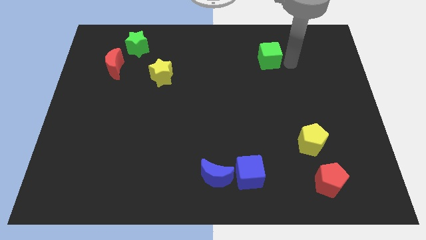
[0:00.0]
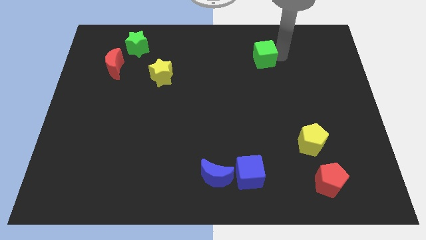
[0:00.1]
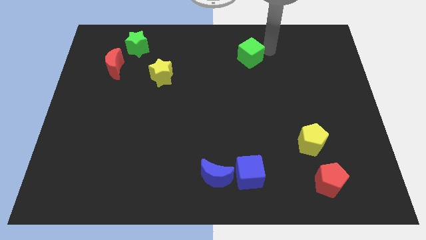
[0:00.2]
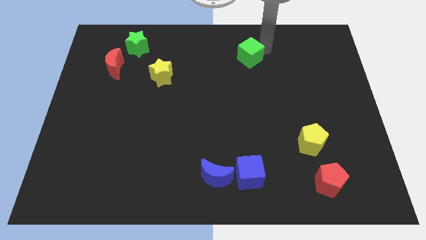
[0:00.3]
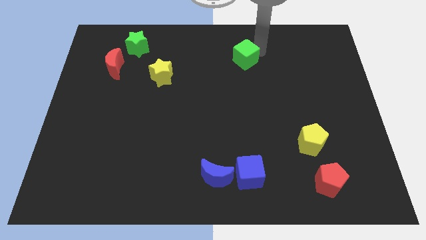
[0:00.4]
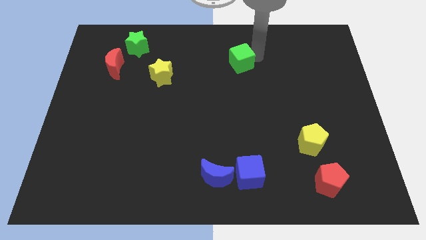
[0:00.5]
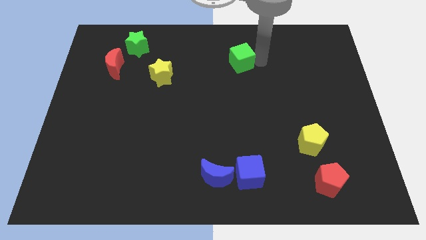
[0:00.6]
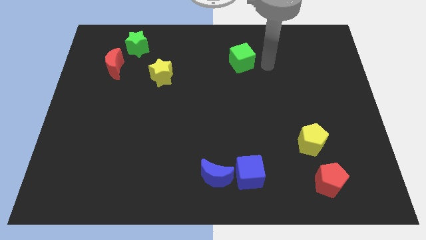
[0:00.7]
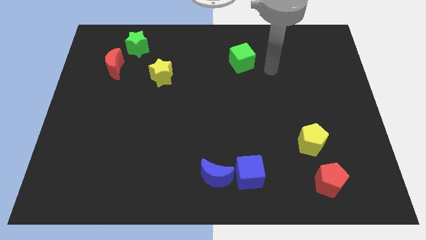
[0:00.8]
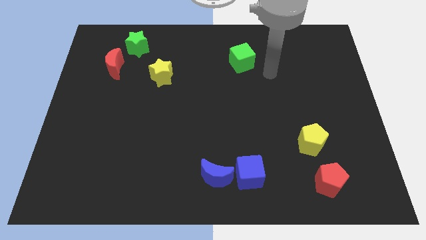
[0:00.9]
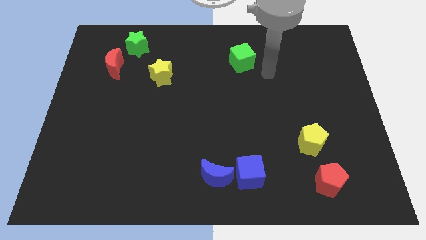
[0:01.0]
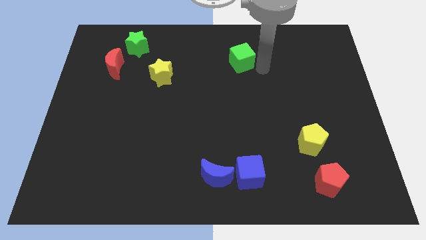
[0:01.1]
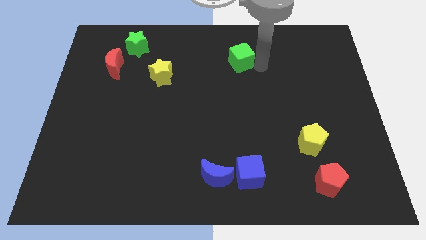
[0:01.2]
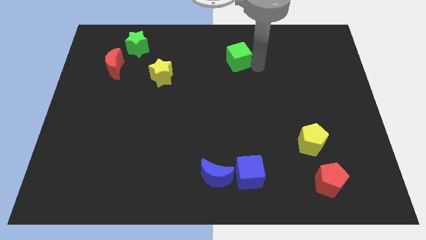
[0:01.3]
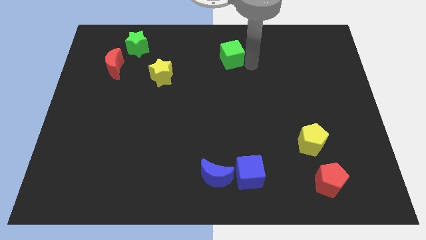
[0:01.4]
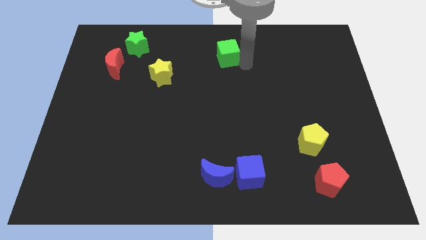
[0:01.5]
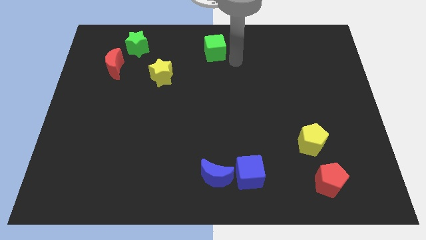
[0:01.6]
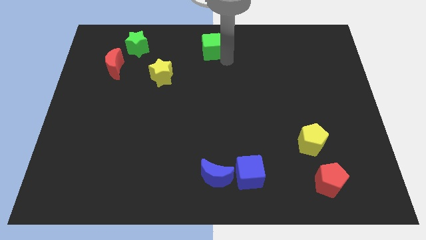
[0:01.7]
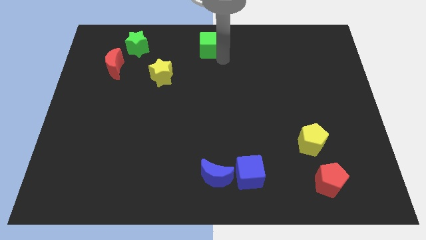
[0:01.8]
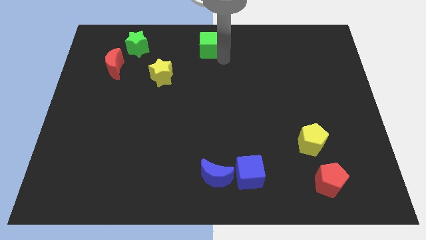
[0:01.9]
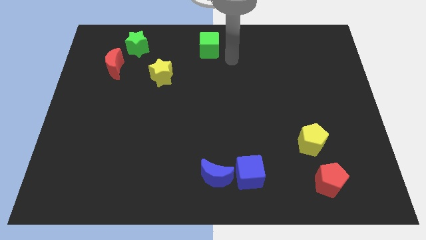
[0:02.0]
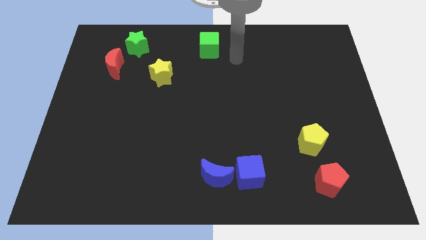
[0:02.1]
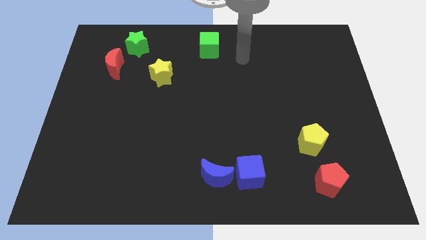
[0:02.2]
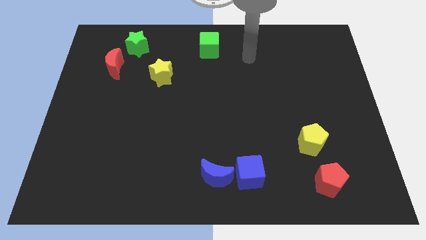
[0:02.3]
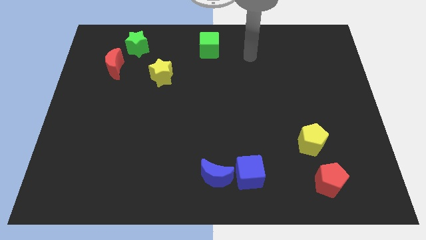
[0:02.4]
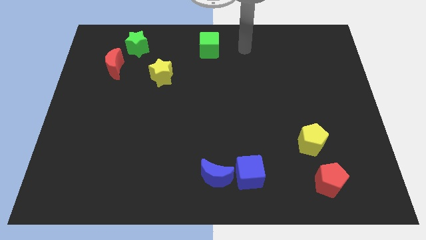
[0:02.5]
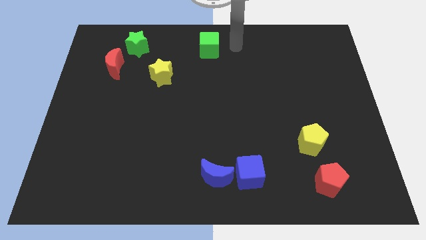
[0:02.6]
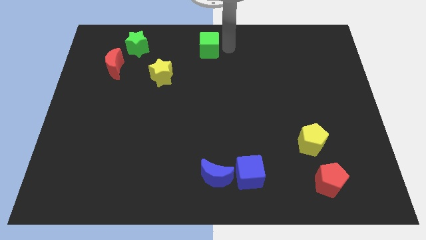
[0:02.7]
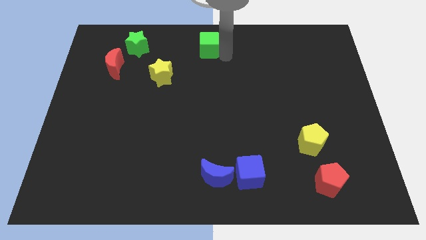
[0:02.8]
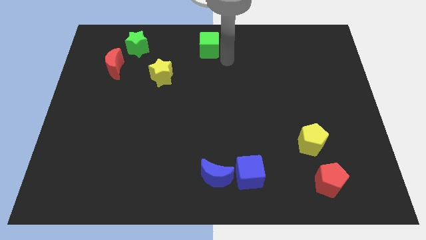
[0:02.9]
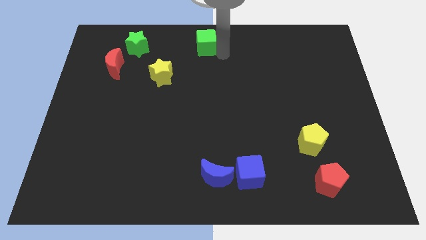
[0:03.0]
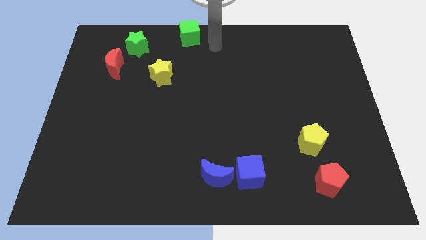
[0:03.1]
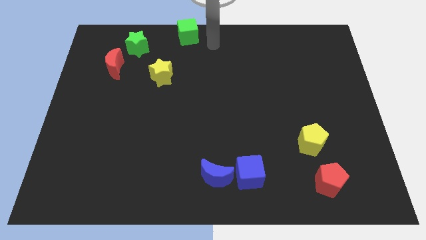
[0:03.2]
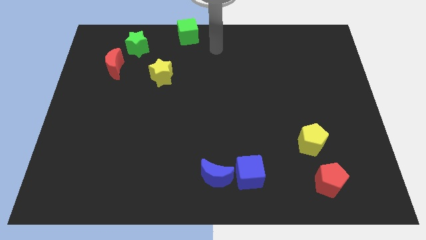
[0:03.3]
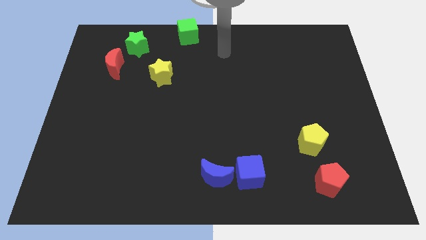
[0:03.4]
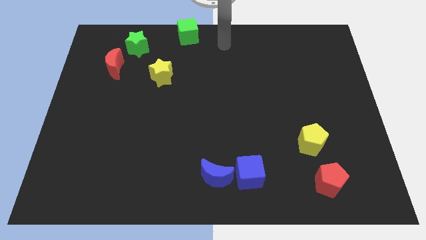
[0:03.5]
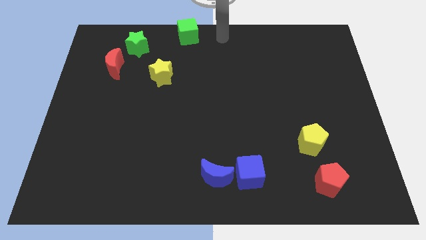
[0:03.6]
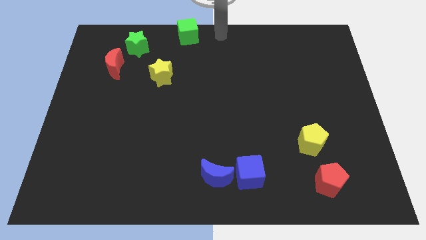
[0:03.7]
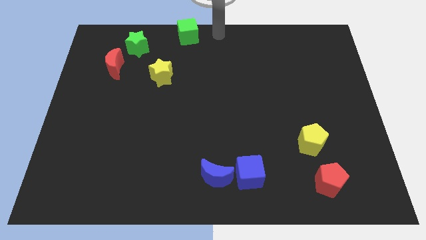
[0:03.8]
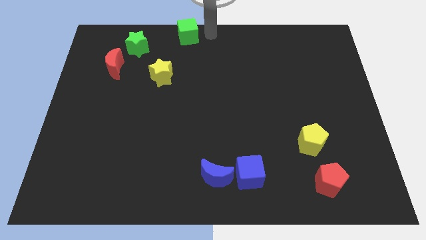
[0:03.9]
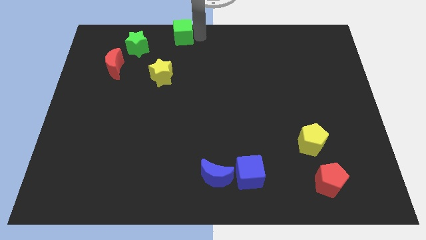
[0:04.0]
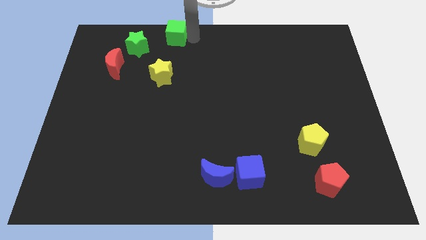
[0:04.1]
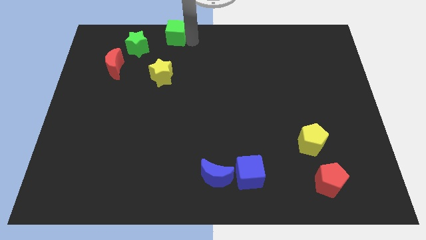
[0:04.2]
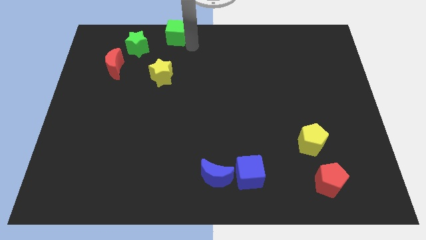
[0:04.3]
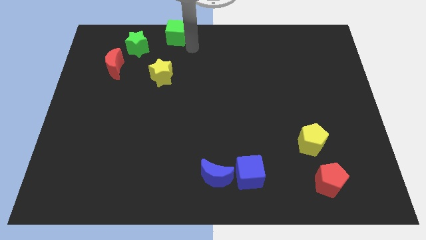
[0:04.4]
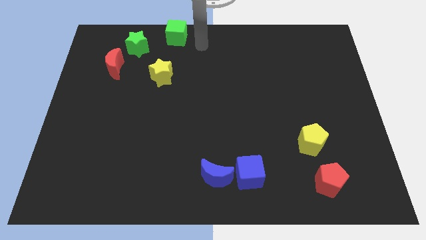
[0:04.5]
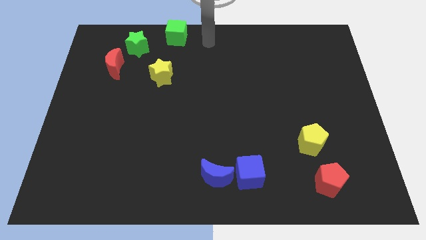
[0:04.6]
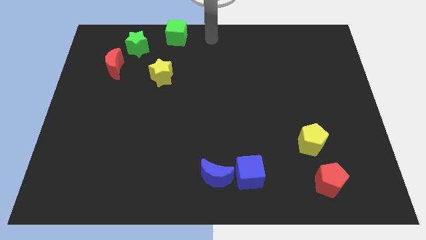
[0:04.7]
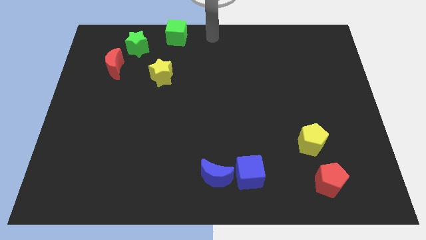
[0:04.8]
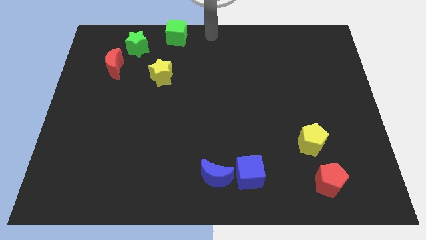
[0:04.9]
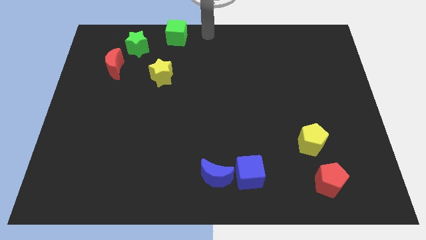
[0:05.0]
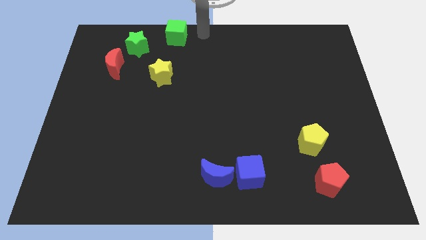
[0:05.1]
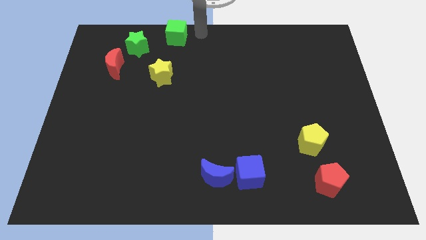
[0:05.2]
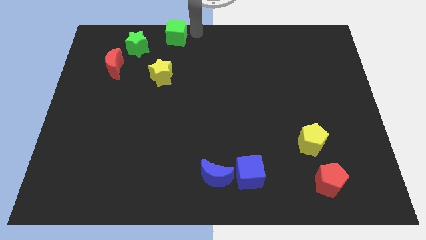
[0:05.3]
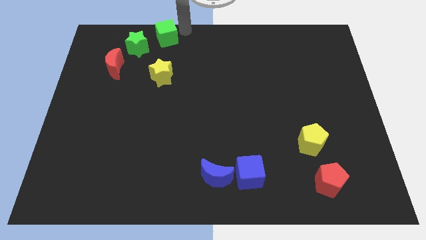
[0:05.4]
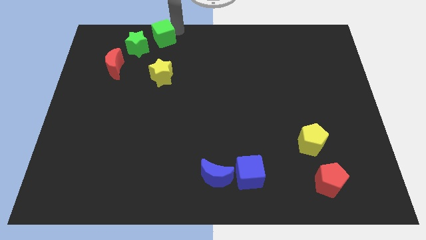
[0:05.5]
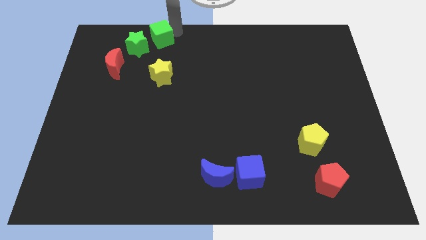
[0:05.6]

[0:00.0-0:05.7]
push the green cube to the right of the green star

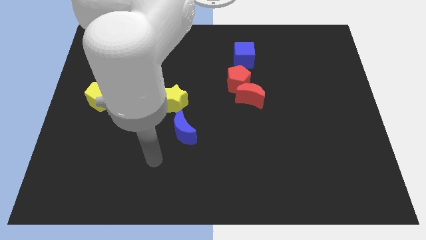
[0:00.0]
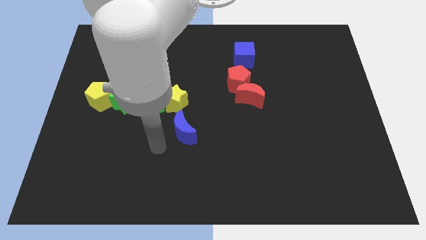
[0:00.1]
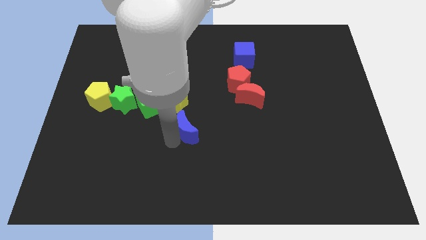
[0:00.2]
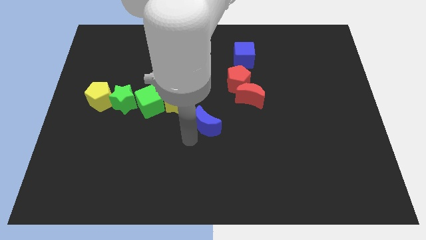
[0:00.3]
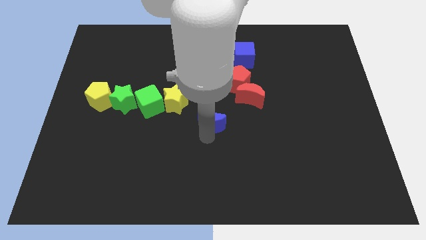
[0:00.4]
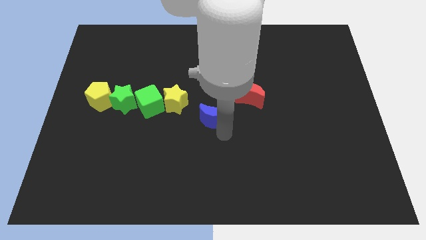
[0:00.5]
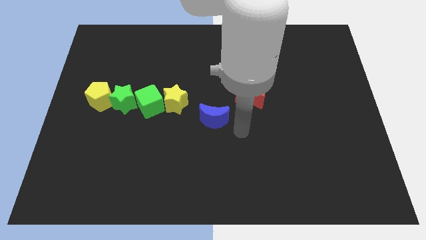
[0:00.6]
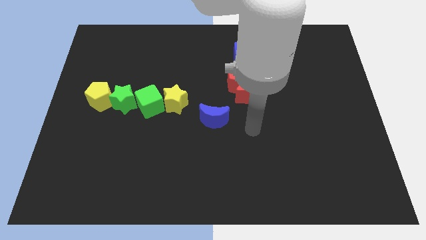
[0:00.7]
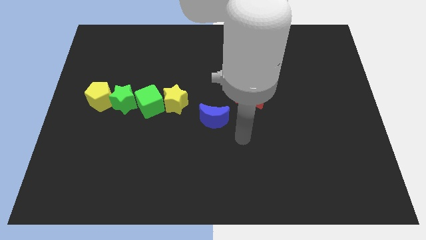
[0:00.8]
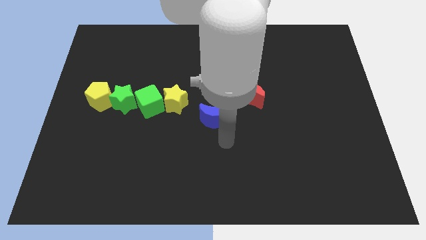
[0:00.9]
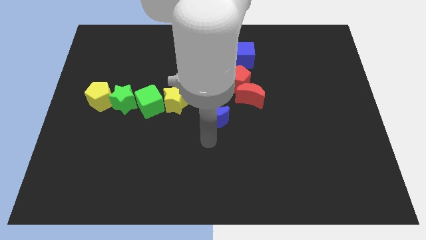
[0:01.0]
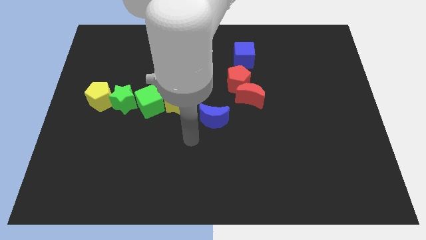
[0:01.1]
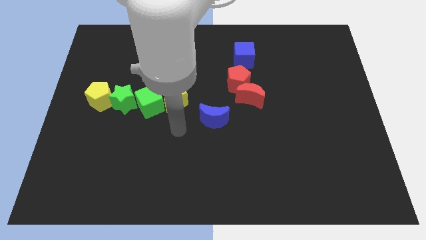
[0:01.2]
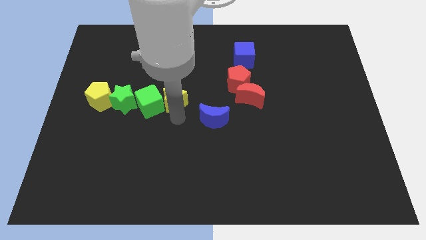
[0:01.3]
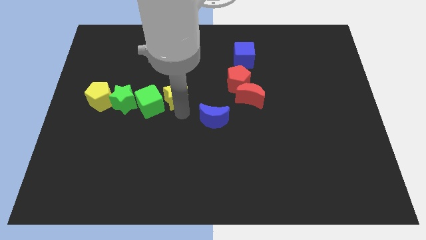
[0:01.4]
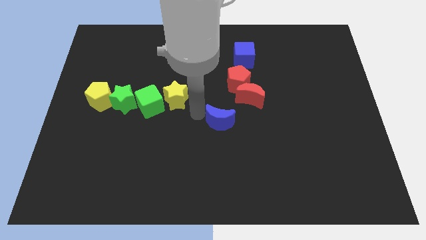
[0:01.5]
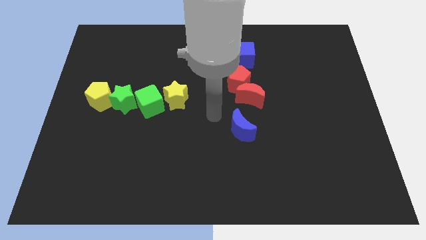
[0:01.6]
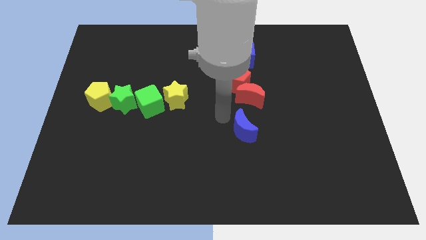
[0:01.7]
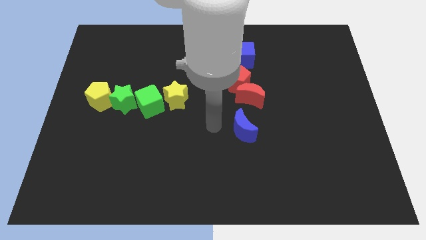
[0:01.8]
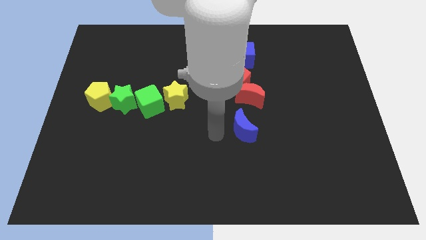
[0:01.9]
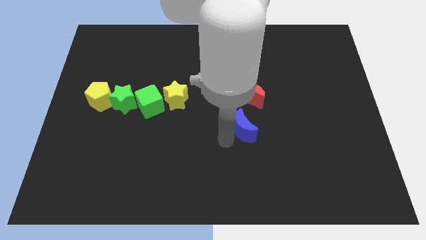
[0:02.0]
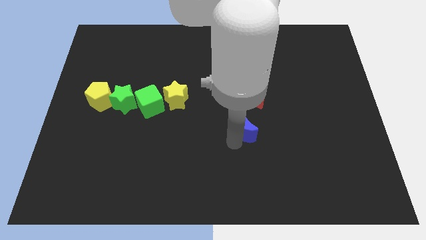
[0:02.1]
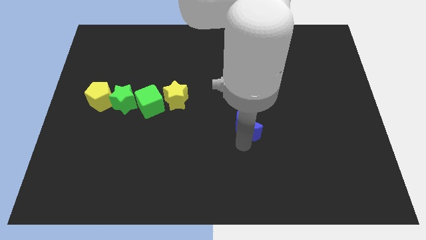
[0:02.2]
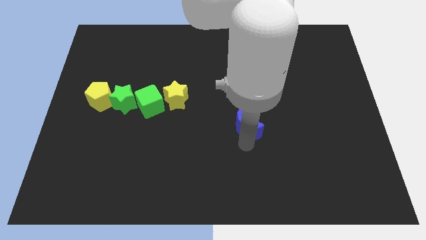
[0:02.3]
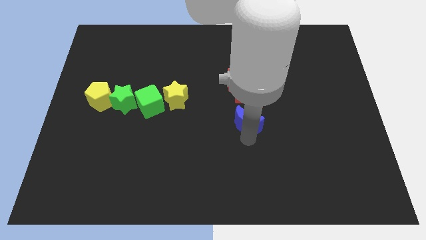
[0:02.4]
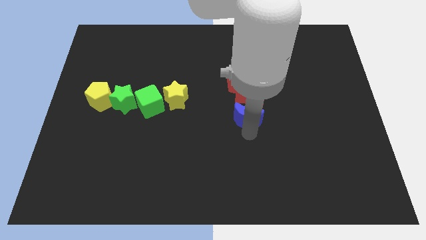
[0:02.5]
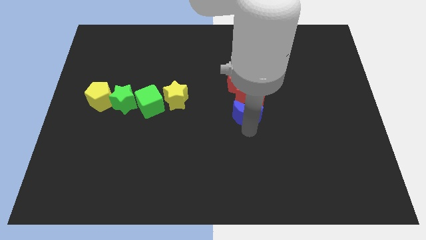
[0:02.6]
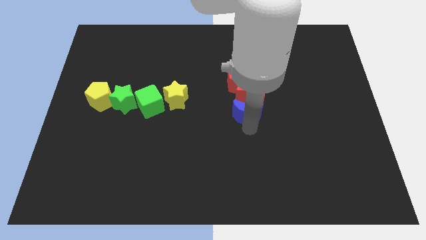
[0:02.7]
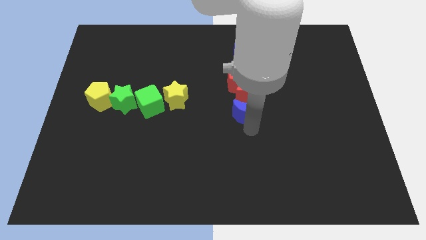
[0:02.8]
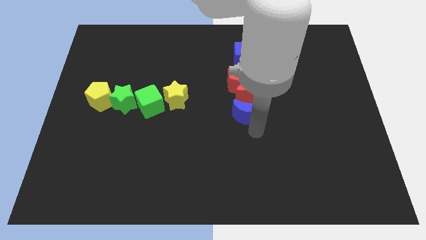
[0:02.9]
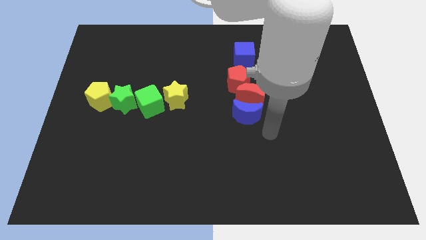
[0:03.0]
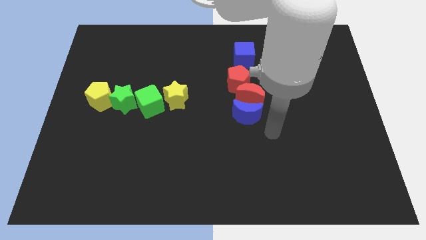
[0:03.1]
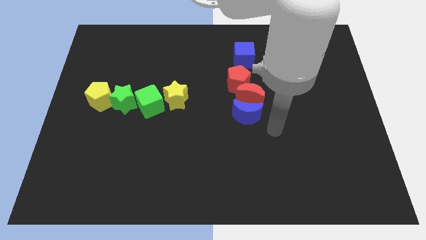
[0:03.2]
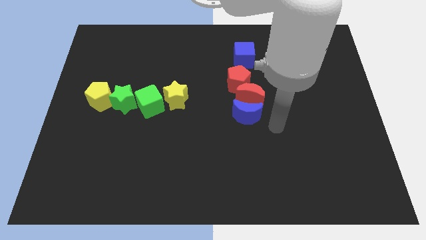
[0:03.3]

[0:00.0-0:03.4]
slide the blue moon to the red crescent
